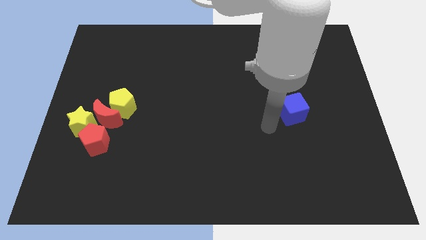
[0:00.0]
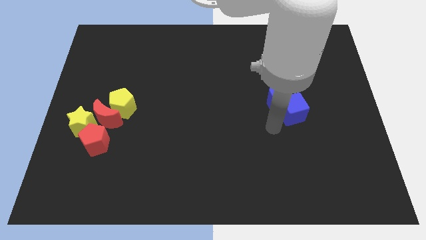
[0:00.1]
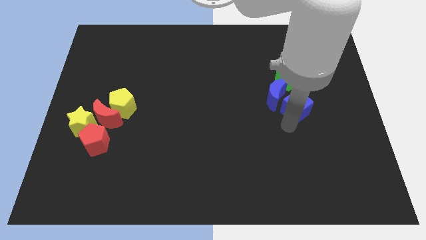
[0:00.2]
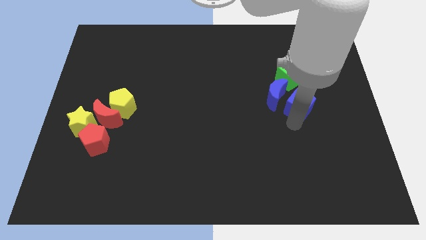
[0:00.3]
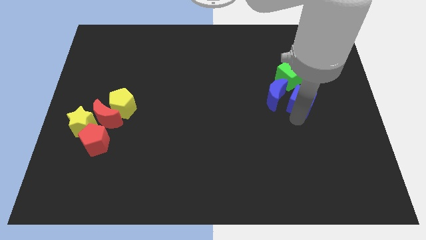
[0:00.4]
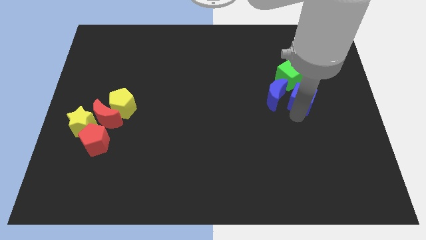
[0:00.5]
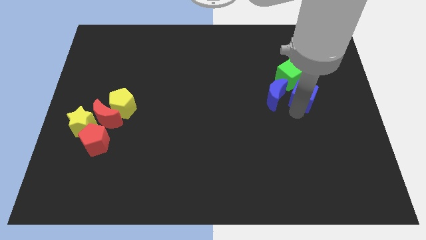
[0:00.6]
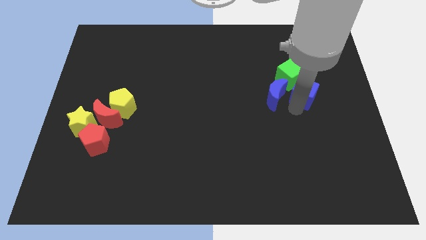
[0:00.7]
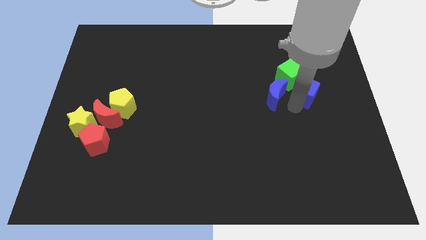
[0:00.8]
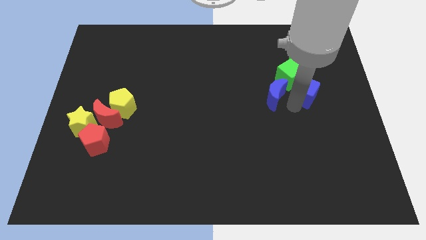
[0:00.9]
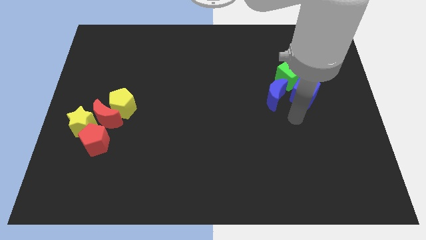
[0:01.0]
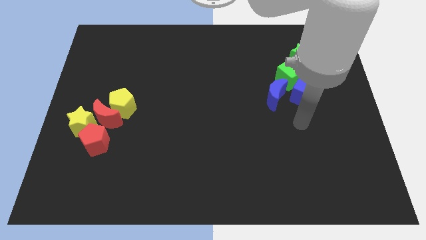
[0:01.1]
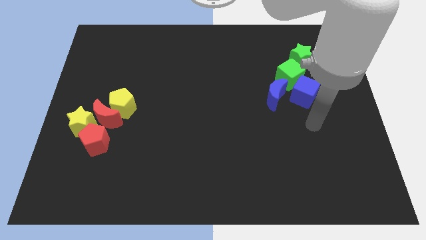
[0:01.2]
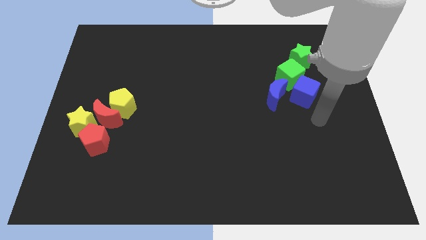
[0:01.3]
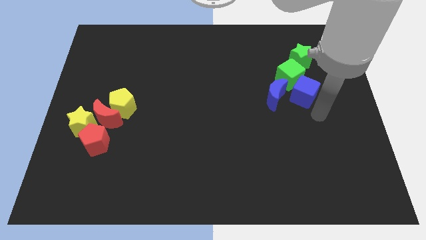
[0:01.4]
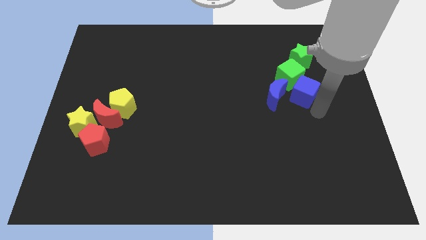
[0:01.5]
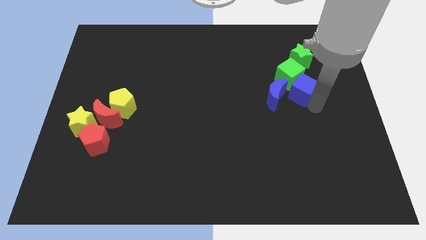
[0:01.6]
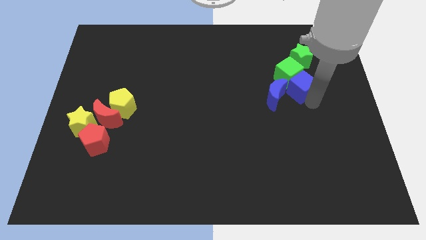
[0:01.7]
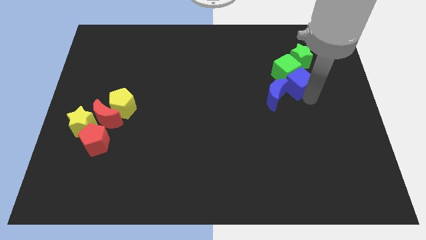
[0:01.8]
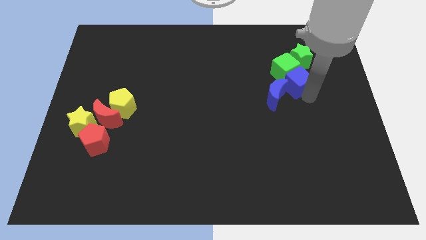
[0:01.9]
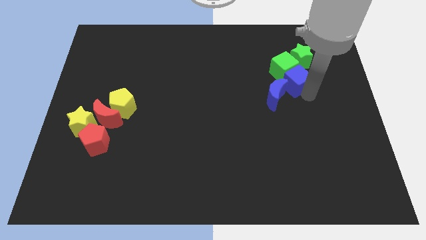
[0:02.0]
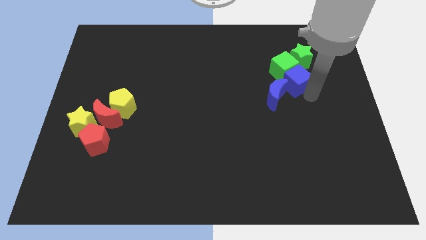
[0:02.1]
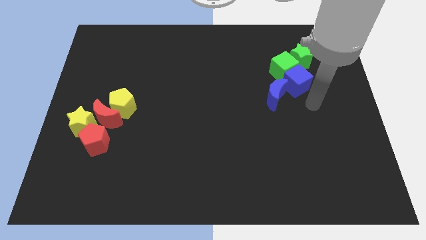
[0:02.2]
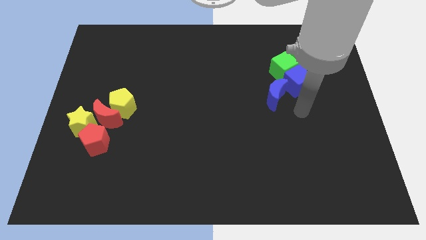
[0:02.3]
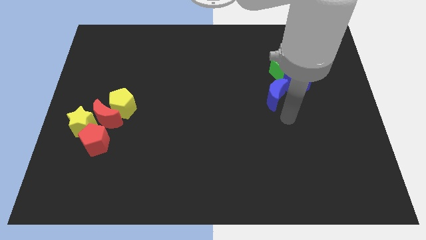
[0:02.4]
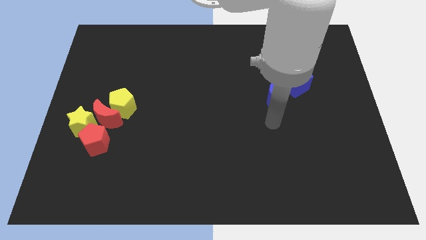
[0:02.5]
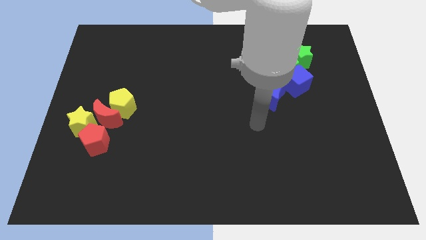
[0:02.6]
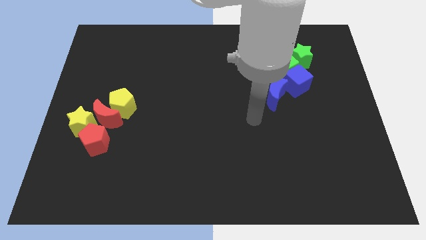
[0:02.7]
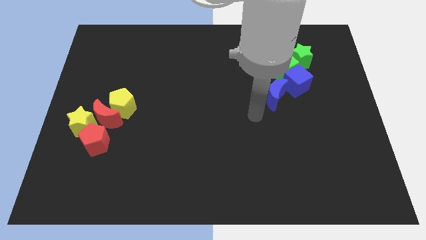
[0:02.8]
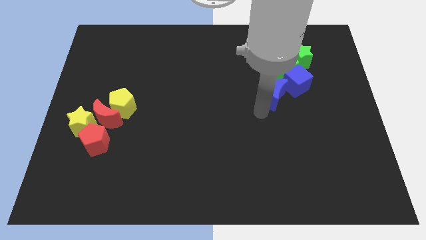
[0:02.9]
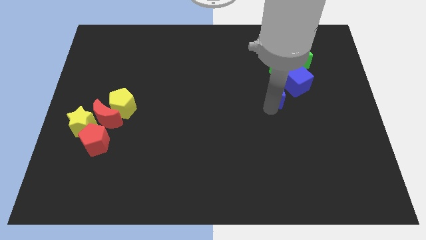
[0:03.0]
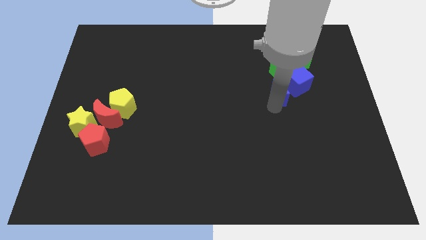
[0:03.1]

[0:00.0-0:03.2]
push the blue cube into the group of blocks

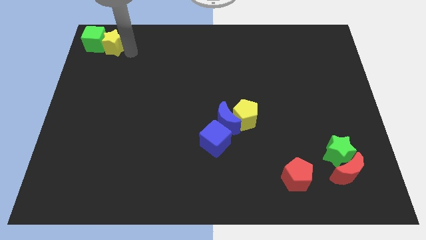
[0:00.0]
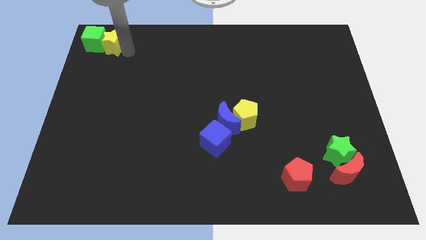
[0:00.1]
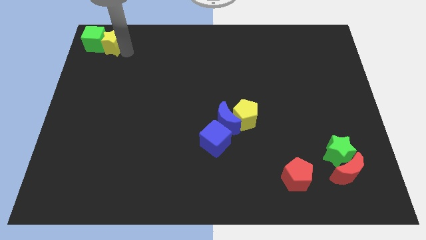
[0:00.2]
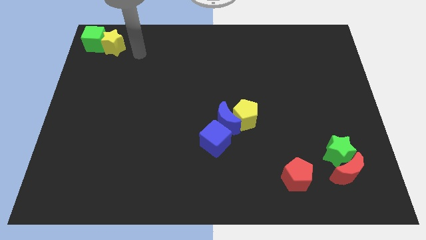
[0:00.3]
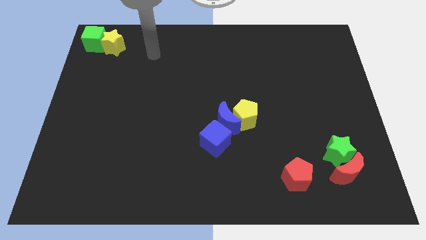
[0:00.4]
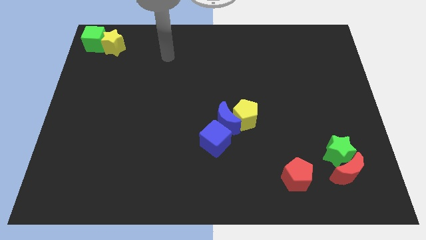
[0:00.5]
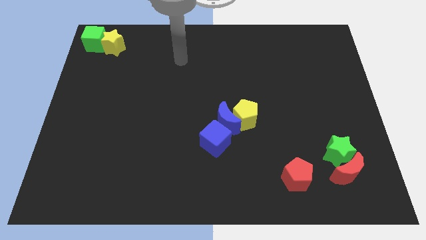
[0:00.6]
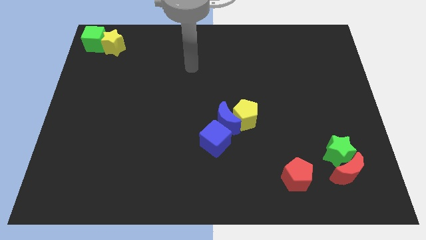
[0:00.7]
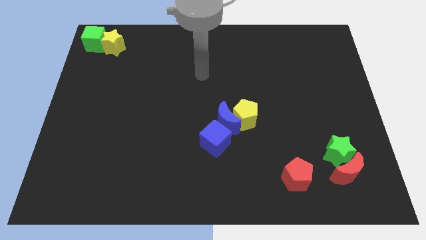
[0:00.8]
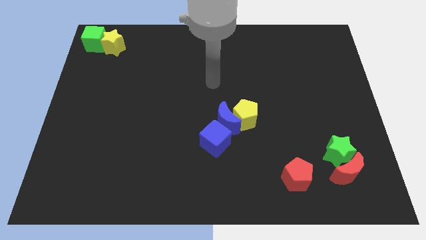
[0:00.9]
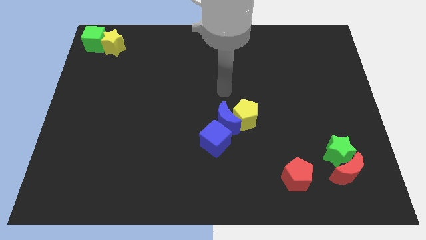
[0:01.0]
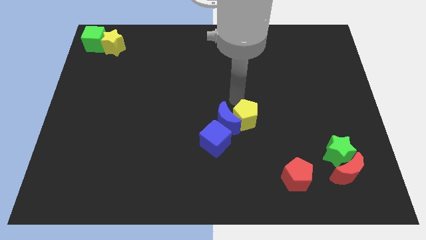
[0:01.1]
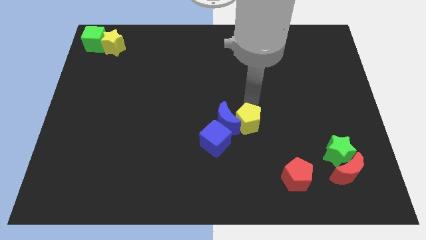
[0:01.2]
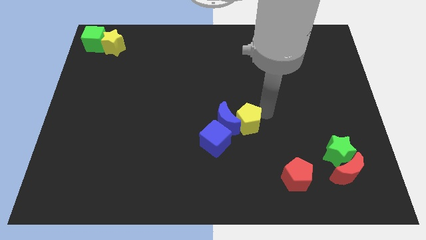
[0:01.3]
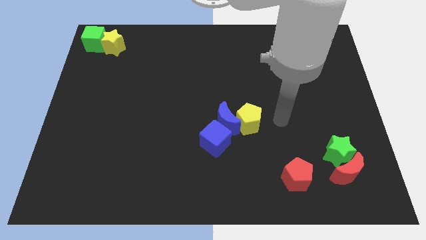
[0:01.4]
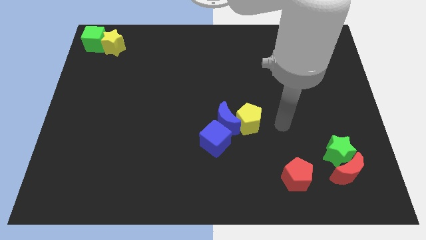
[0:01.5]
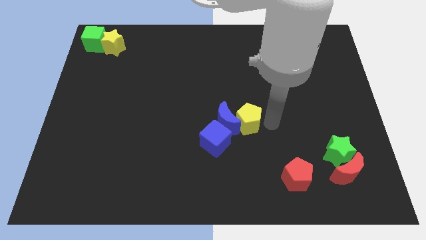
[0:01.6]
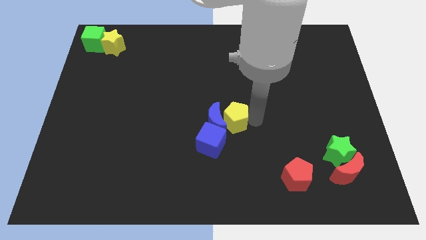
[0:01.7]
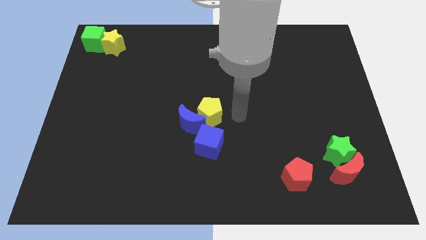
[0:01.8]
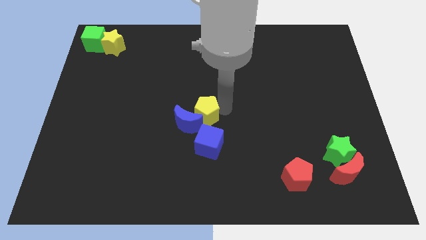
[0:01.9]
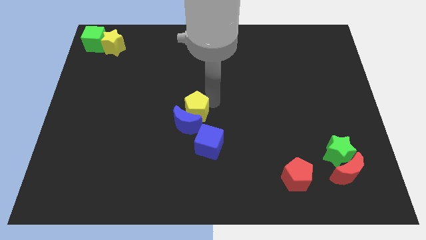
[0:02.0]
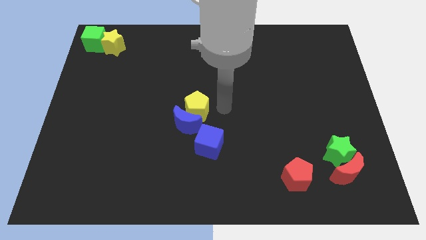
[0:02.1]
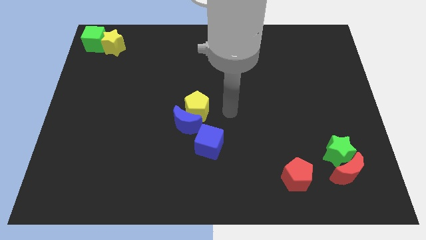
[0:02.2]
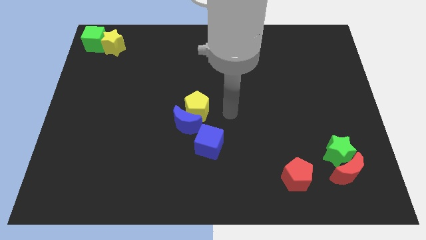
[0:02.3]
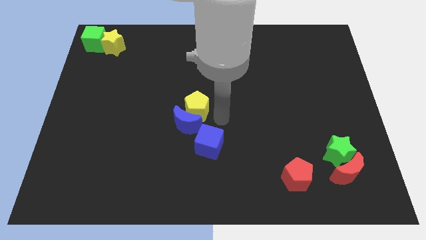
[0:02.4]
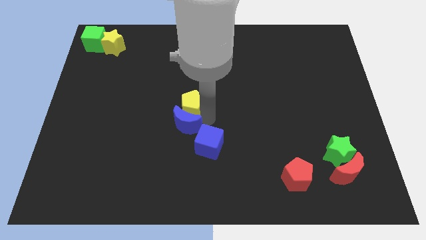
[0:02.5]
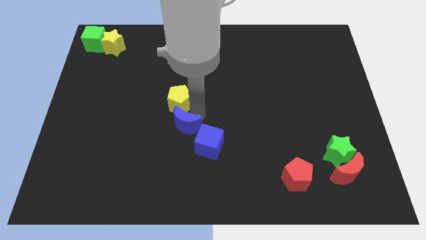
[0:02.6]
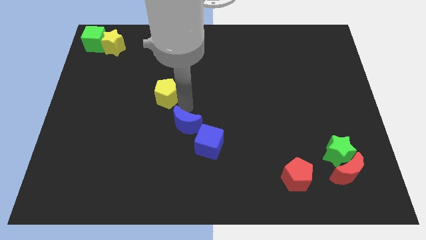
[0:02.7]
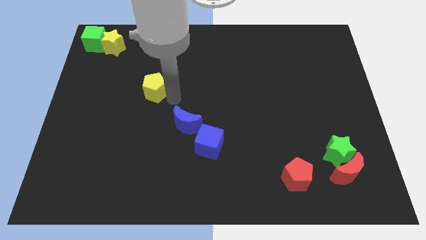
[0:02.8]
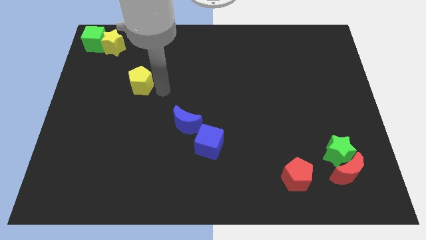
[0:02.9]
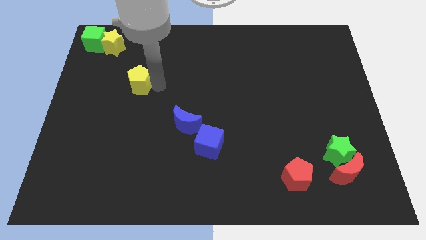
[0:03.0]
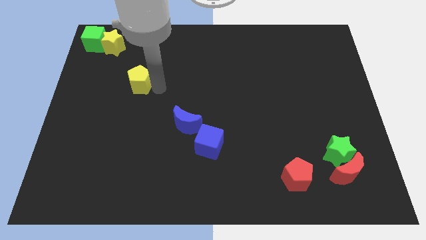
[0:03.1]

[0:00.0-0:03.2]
slide the yellow pentagon in between the yellow star and the blue moon

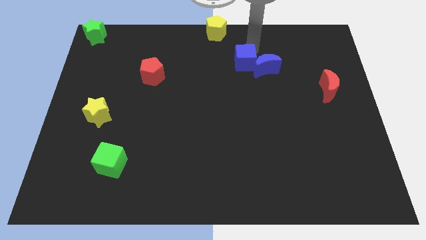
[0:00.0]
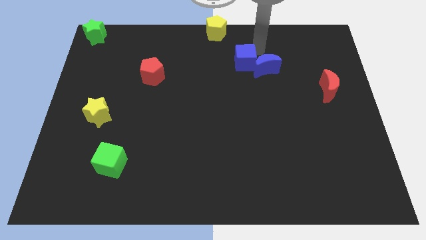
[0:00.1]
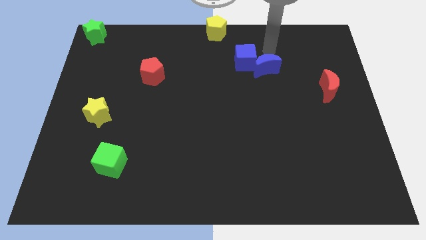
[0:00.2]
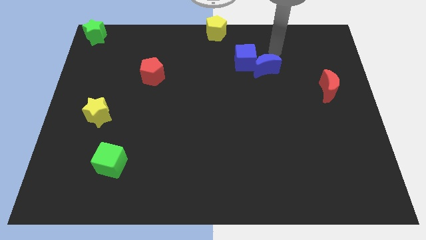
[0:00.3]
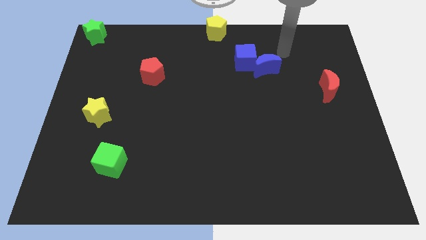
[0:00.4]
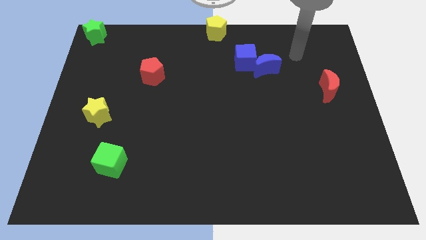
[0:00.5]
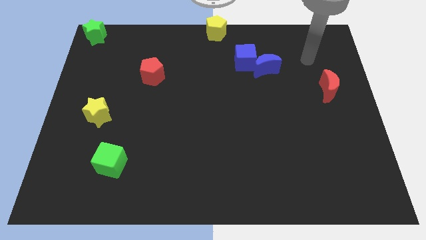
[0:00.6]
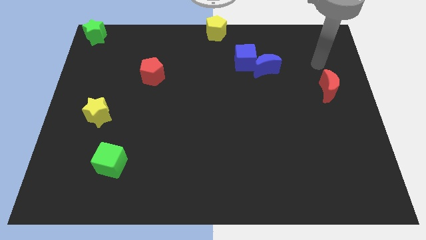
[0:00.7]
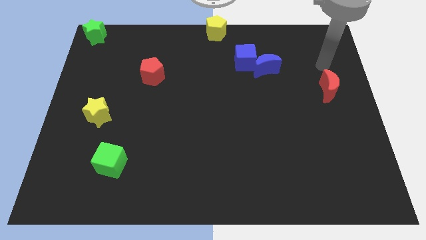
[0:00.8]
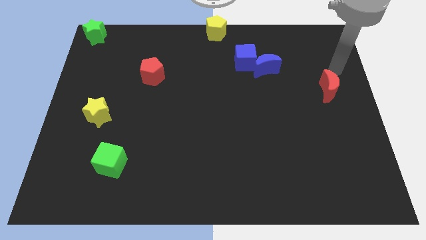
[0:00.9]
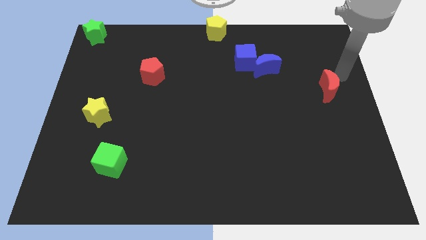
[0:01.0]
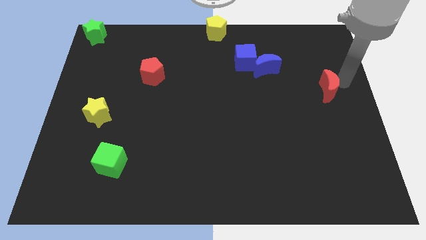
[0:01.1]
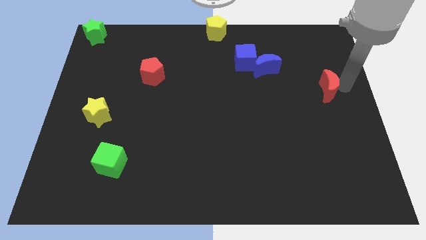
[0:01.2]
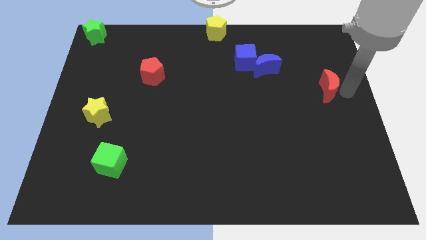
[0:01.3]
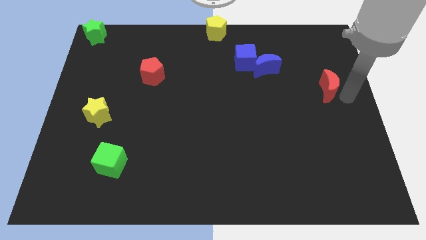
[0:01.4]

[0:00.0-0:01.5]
push your arm to the right of the red crescent

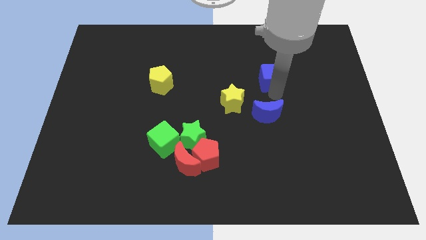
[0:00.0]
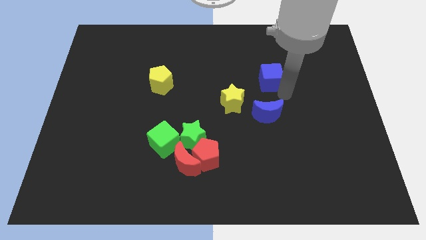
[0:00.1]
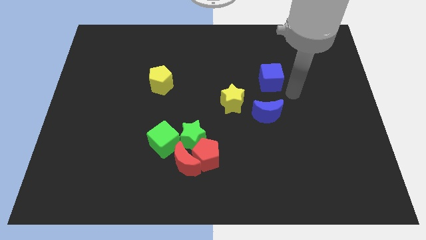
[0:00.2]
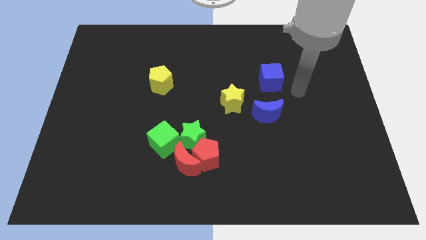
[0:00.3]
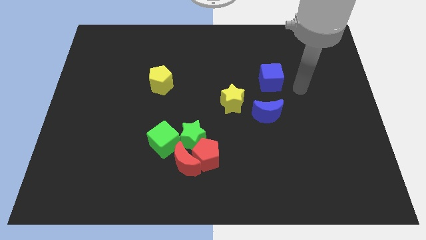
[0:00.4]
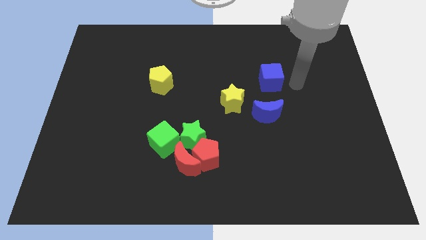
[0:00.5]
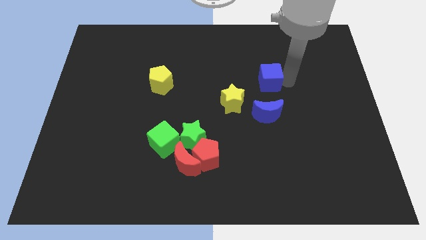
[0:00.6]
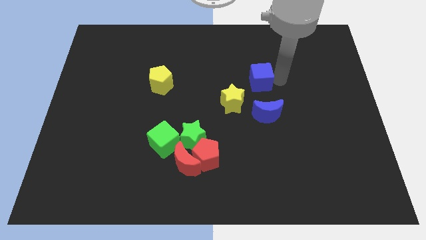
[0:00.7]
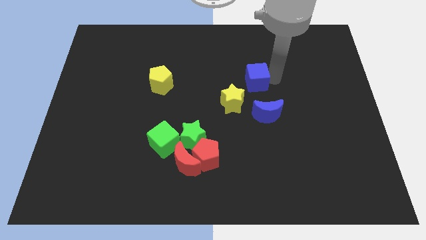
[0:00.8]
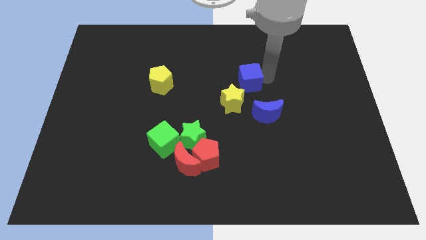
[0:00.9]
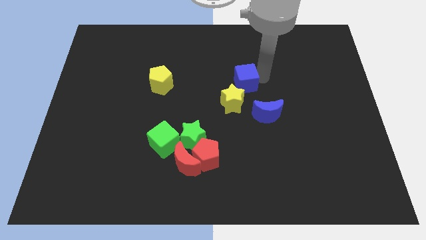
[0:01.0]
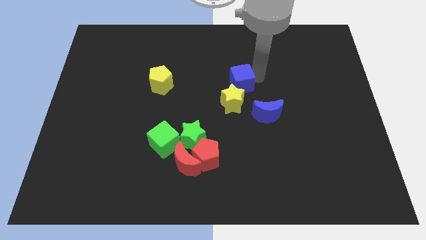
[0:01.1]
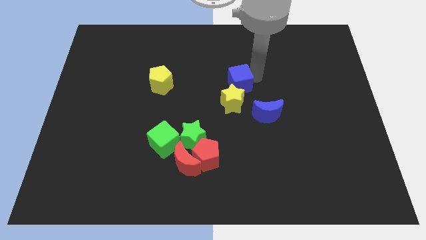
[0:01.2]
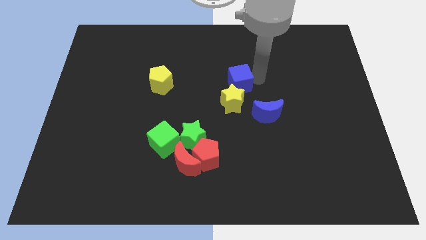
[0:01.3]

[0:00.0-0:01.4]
place the blue cube above the yellow star
